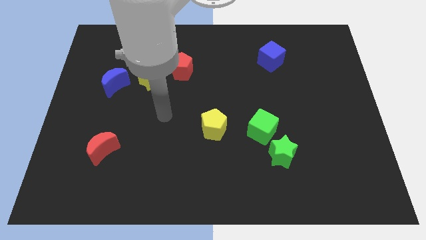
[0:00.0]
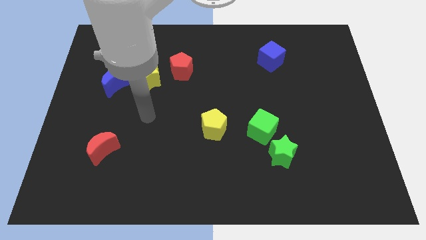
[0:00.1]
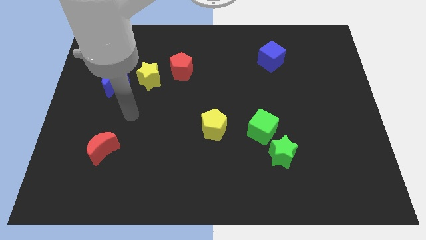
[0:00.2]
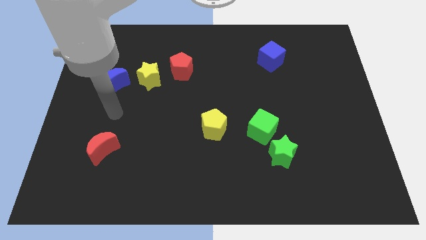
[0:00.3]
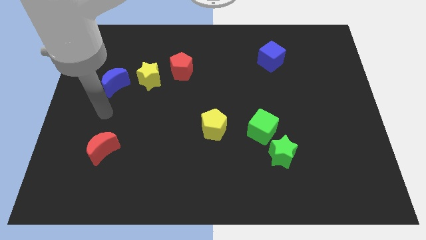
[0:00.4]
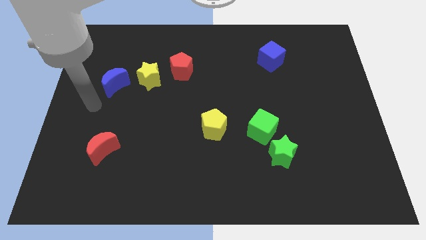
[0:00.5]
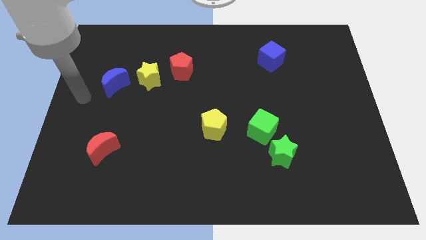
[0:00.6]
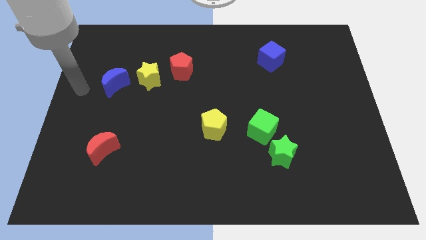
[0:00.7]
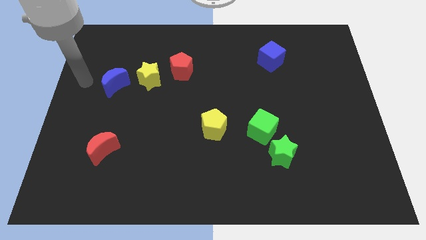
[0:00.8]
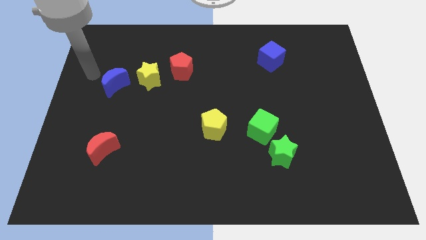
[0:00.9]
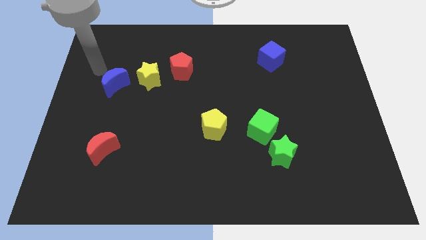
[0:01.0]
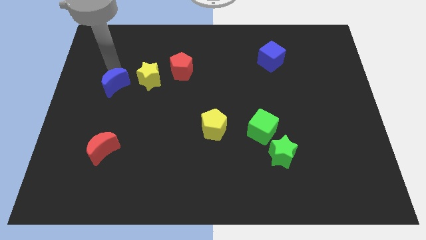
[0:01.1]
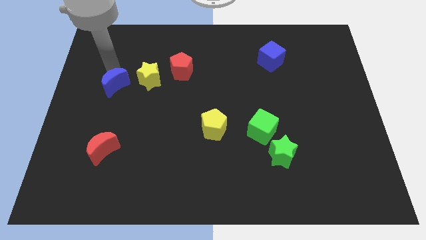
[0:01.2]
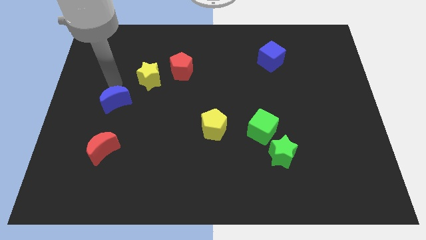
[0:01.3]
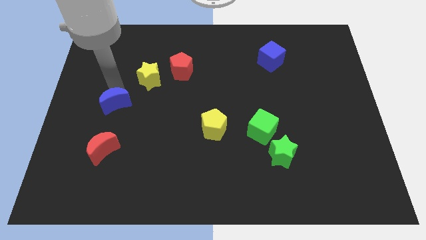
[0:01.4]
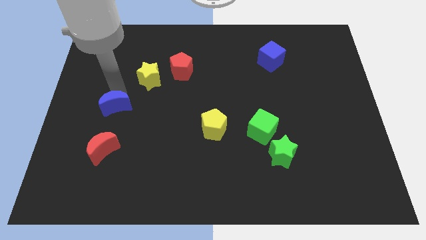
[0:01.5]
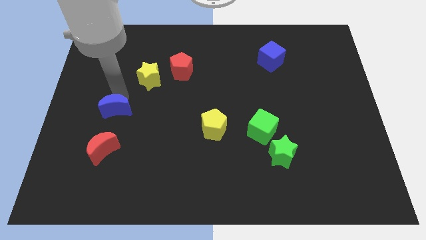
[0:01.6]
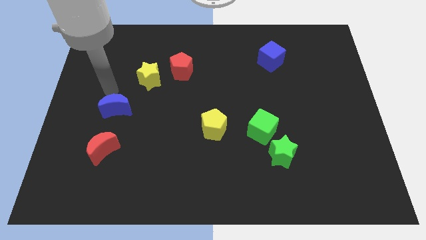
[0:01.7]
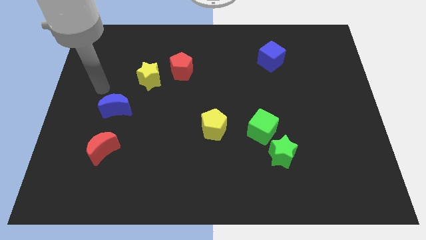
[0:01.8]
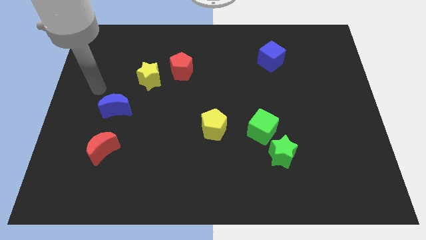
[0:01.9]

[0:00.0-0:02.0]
place the blue moon in between the yellow star and red moon

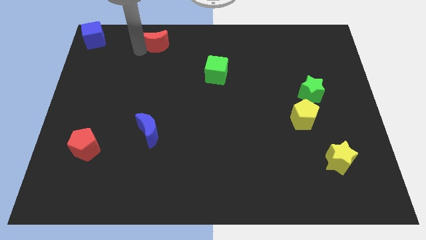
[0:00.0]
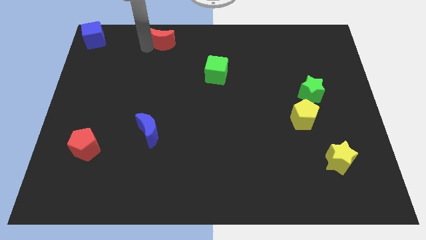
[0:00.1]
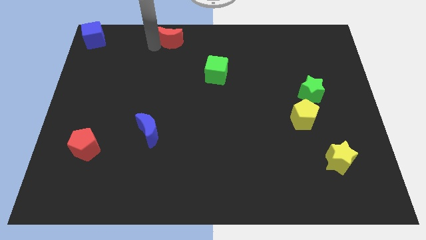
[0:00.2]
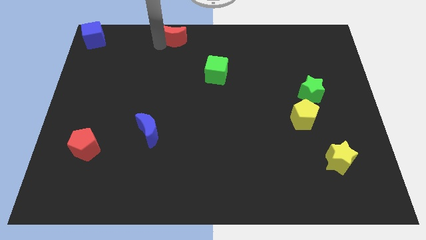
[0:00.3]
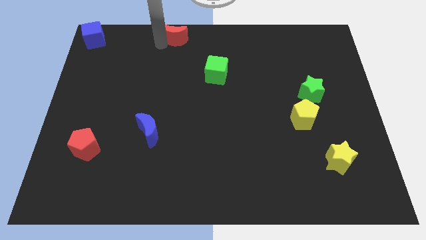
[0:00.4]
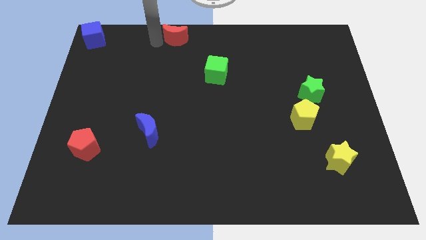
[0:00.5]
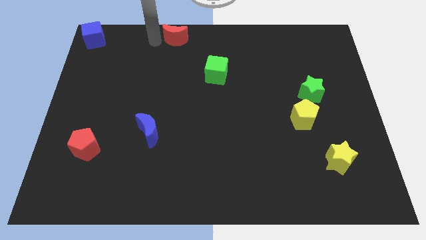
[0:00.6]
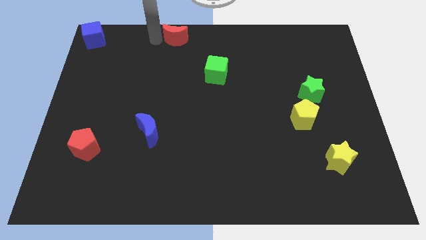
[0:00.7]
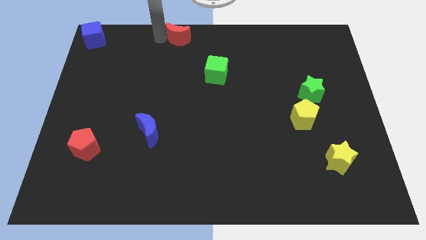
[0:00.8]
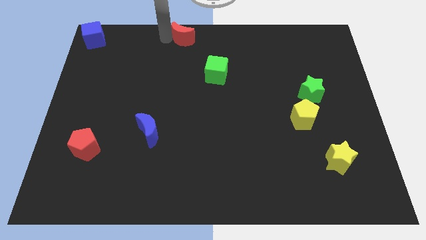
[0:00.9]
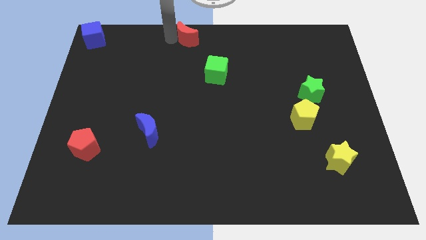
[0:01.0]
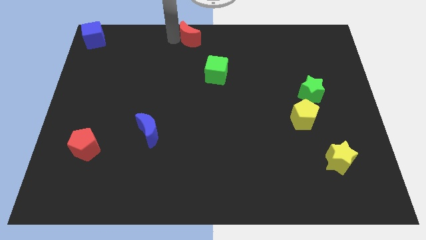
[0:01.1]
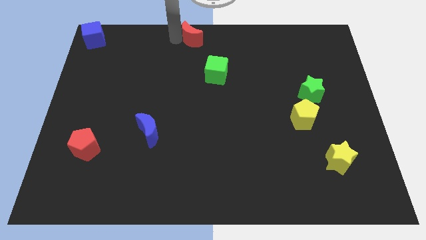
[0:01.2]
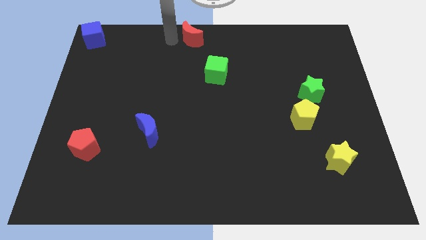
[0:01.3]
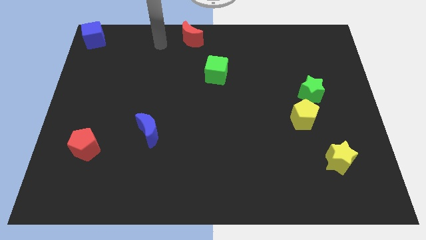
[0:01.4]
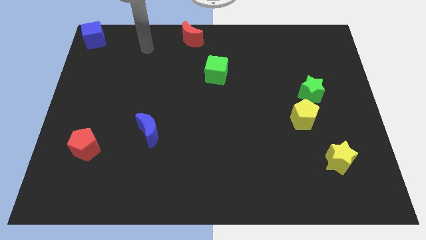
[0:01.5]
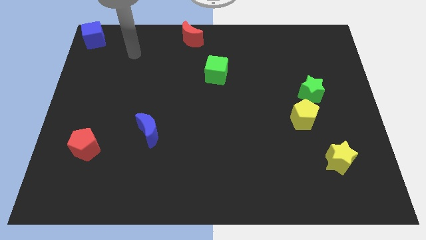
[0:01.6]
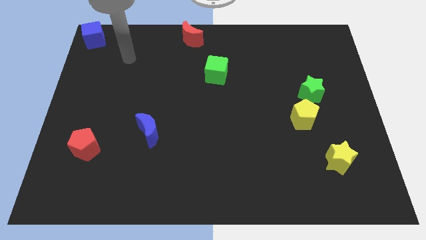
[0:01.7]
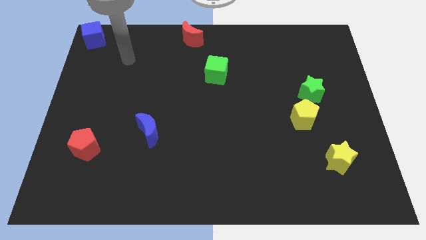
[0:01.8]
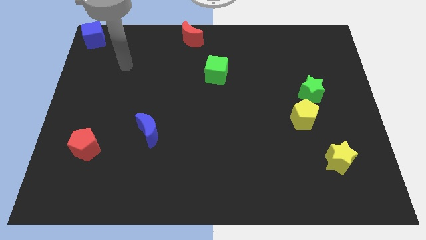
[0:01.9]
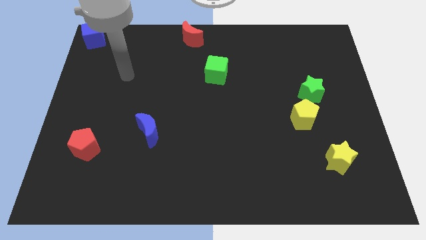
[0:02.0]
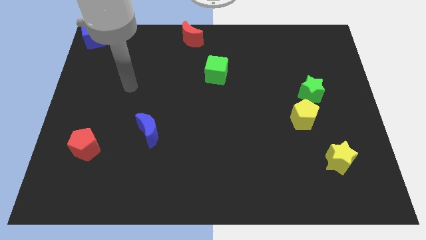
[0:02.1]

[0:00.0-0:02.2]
push the red moon towards the top center of the board

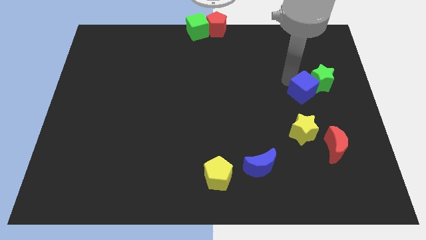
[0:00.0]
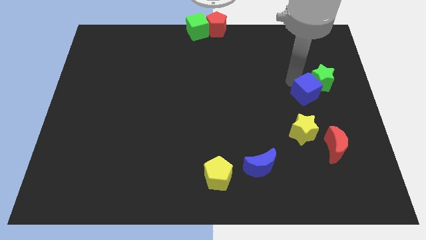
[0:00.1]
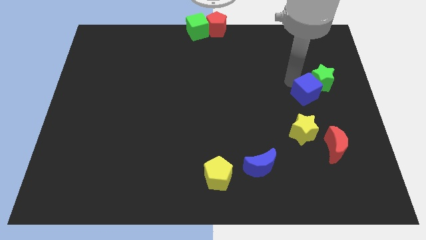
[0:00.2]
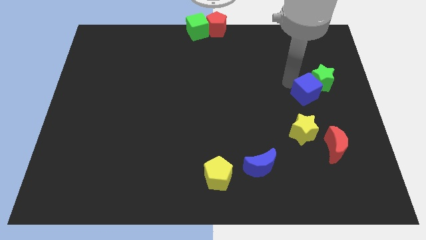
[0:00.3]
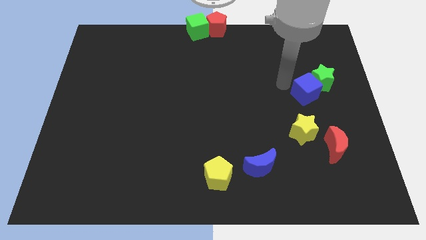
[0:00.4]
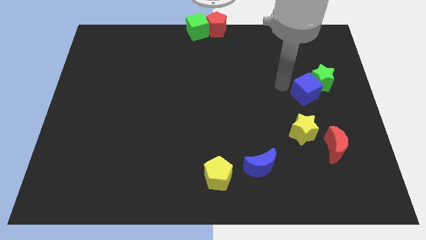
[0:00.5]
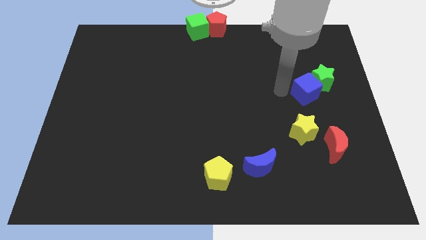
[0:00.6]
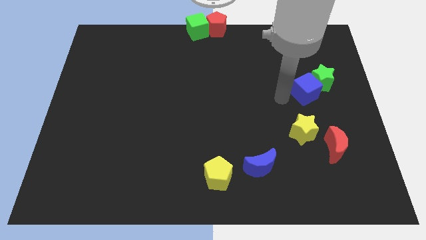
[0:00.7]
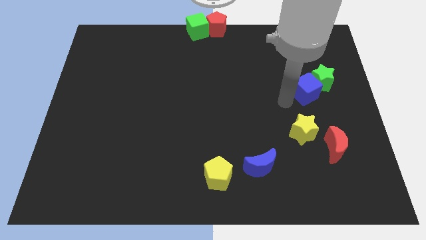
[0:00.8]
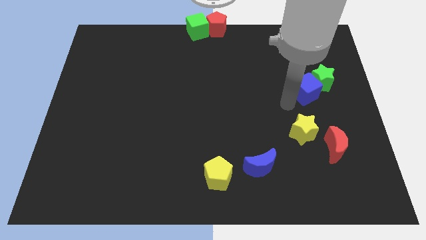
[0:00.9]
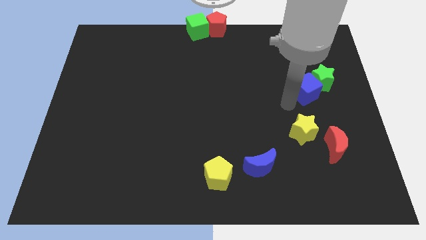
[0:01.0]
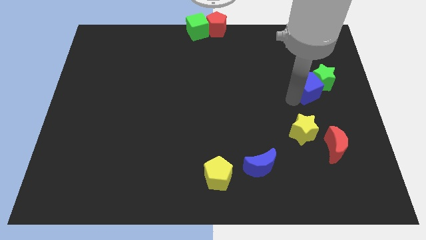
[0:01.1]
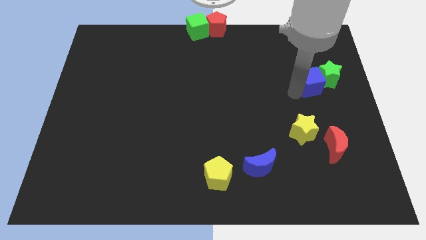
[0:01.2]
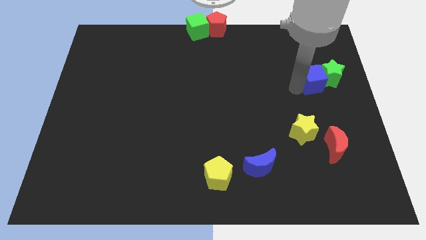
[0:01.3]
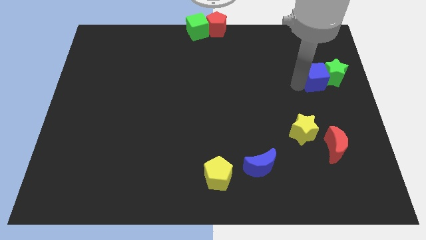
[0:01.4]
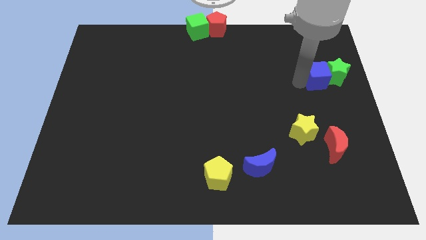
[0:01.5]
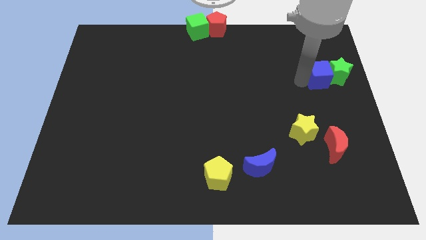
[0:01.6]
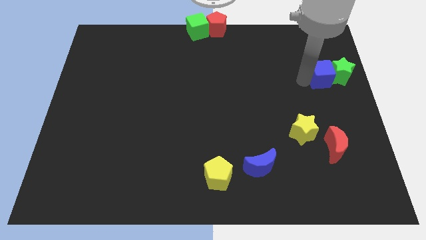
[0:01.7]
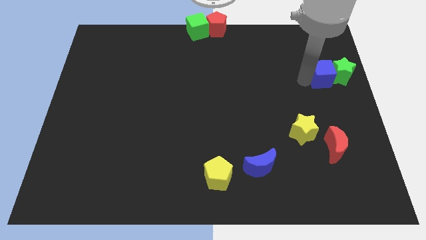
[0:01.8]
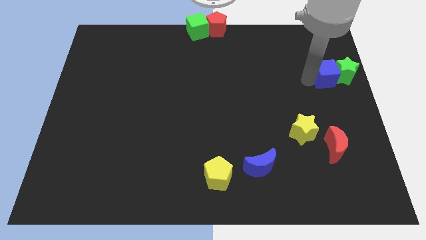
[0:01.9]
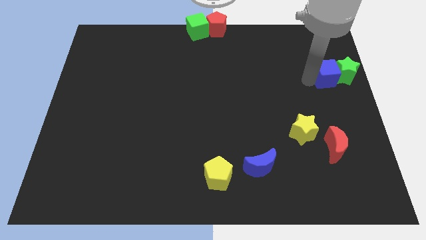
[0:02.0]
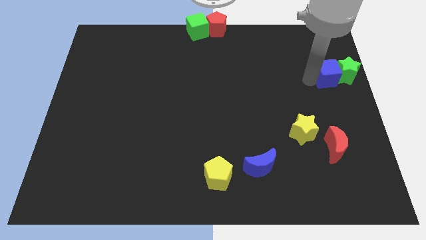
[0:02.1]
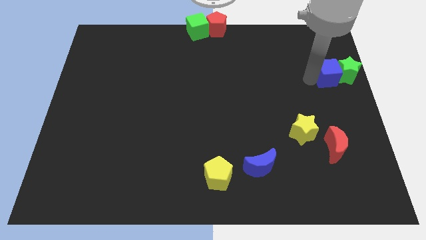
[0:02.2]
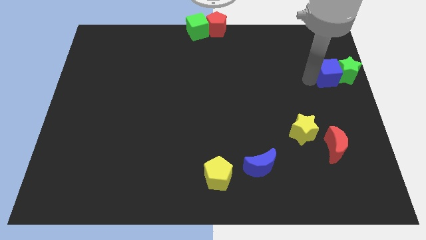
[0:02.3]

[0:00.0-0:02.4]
push blue cube along with green star towards middle right of the board

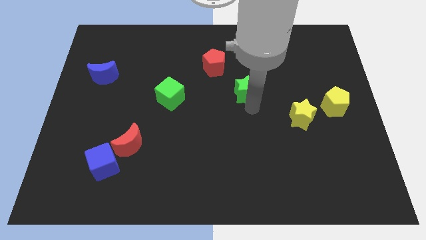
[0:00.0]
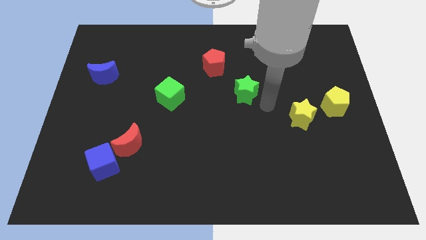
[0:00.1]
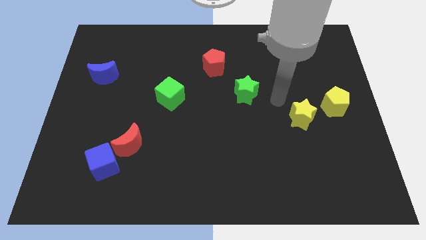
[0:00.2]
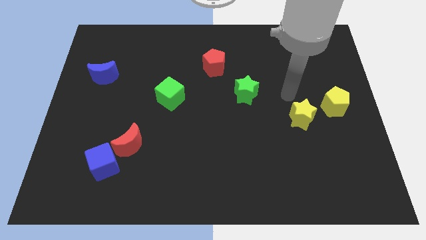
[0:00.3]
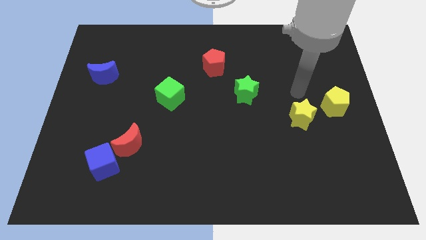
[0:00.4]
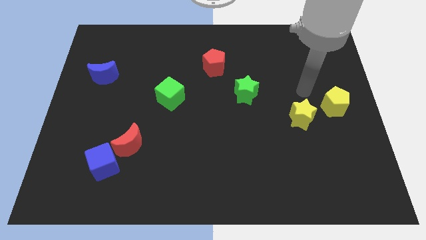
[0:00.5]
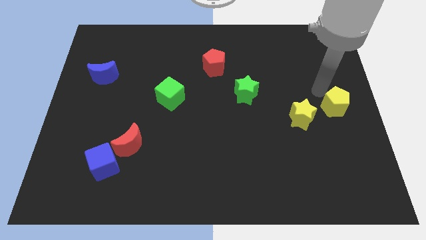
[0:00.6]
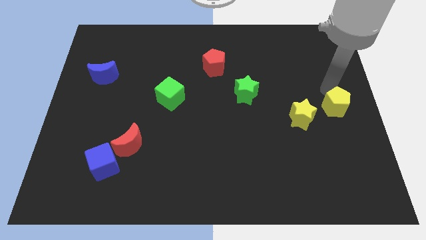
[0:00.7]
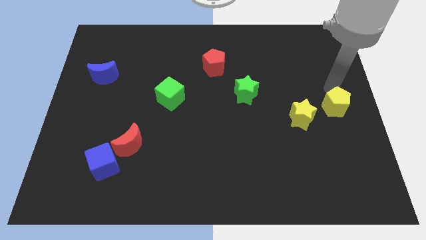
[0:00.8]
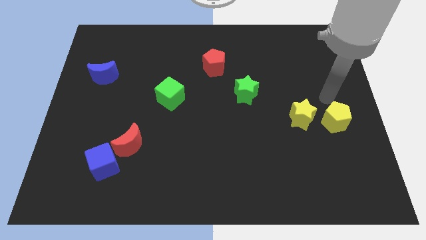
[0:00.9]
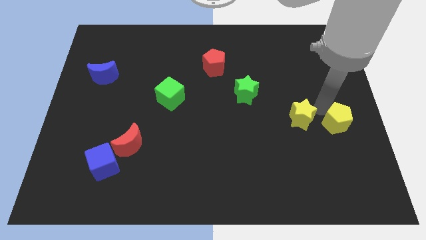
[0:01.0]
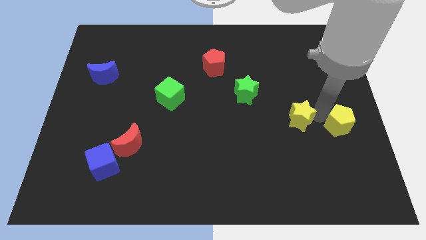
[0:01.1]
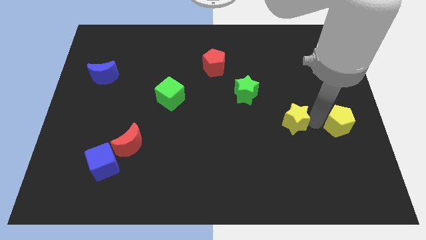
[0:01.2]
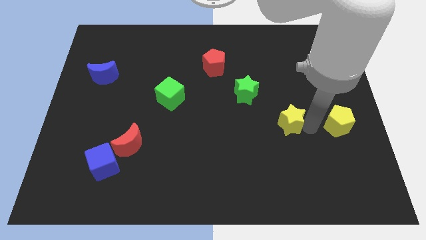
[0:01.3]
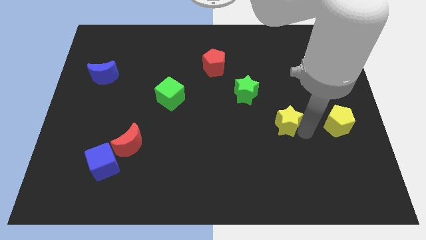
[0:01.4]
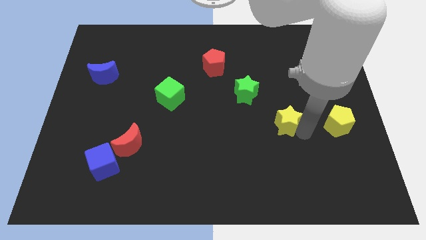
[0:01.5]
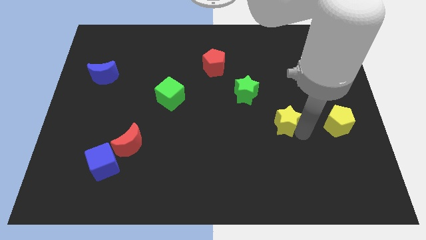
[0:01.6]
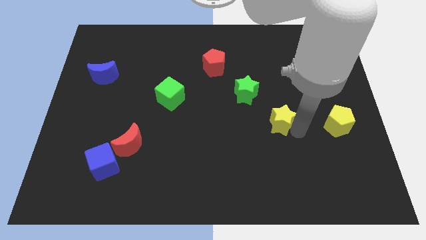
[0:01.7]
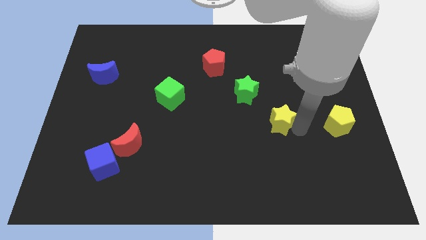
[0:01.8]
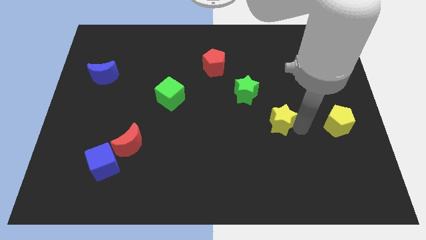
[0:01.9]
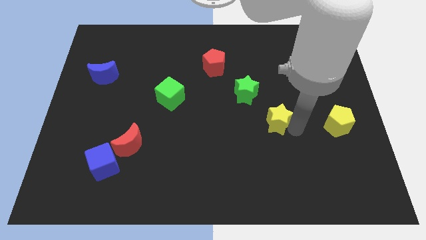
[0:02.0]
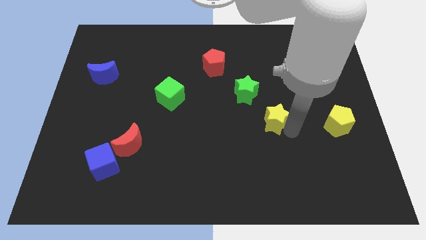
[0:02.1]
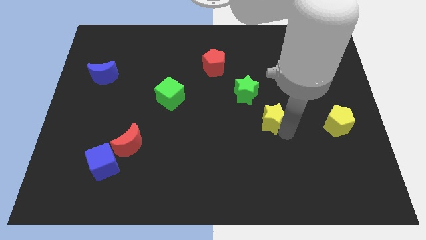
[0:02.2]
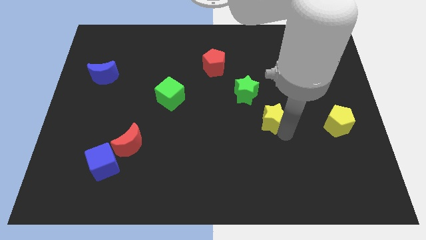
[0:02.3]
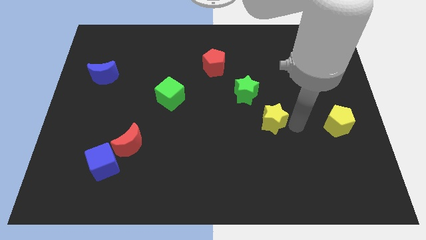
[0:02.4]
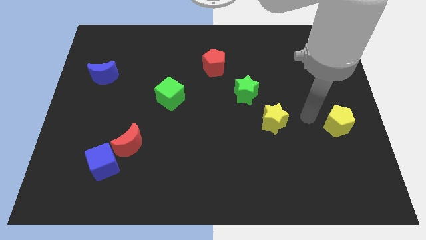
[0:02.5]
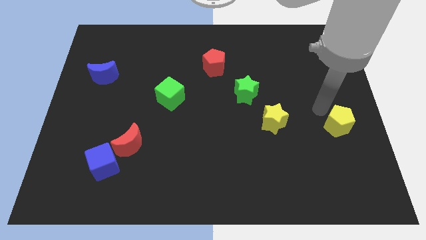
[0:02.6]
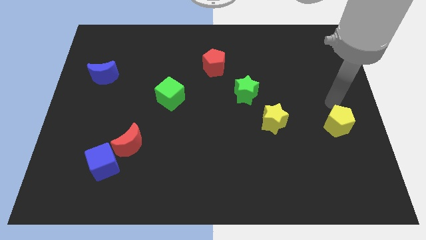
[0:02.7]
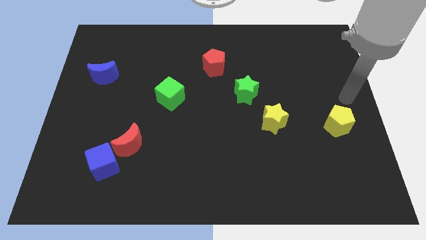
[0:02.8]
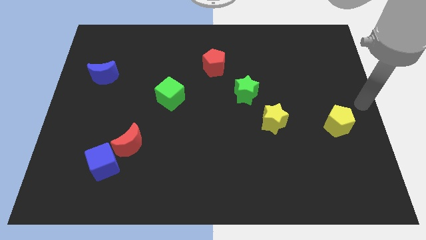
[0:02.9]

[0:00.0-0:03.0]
make a diagonal line using red pentagon green star and the yellow star
